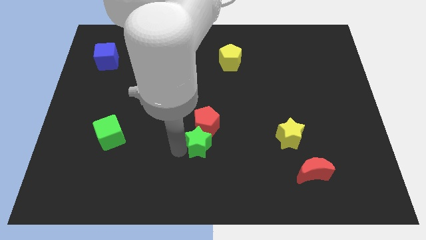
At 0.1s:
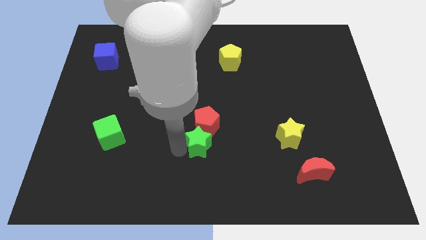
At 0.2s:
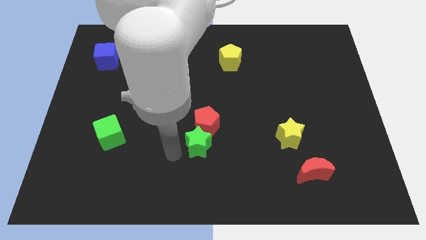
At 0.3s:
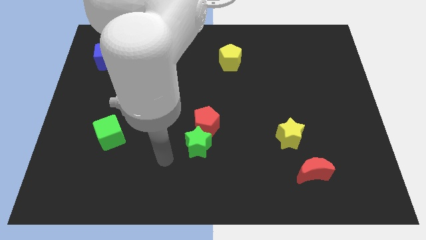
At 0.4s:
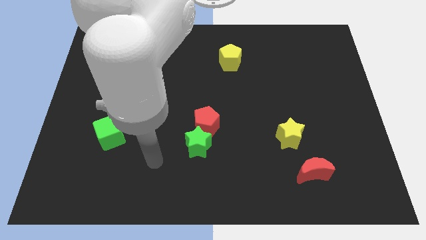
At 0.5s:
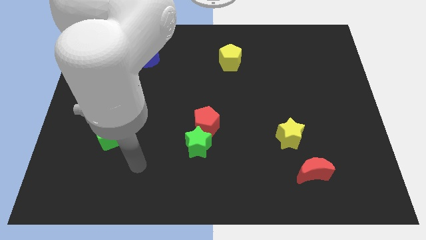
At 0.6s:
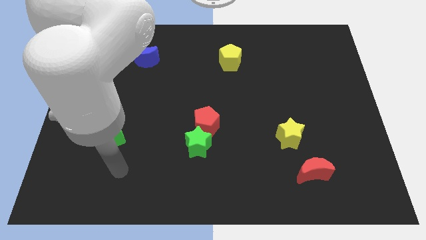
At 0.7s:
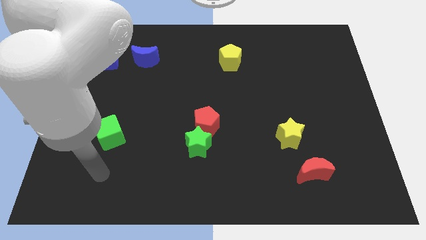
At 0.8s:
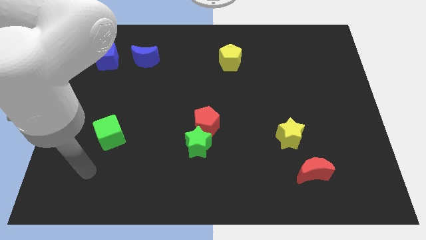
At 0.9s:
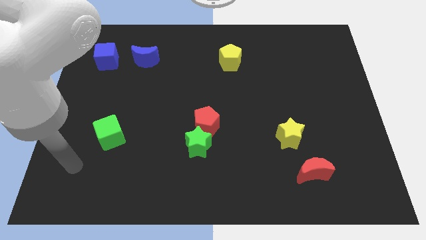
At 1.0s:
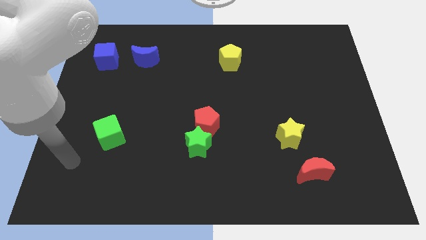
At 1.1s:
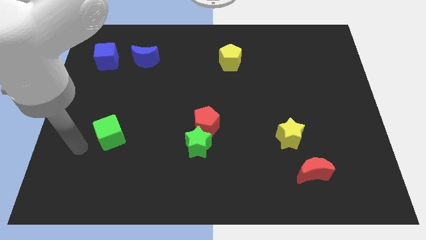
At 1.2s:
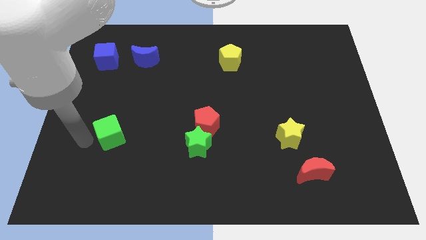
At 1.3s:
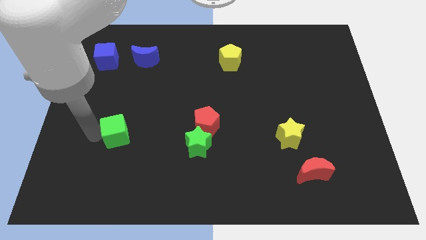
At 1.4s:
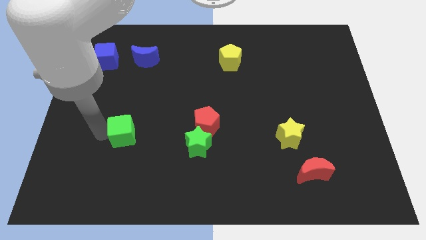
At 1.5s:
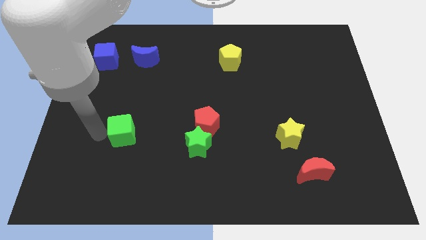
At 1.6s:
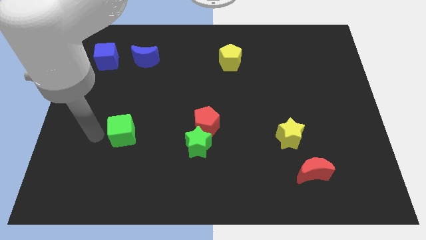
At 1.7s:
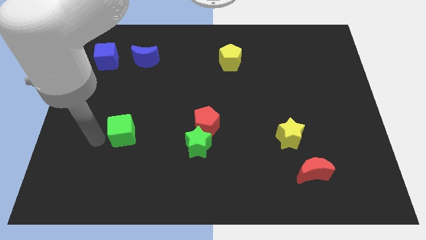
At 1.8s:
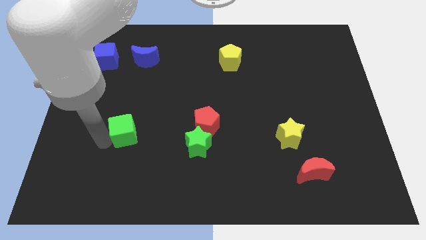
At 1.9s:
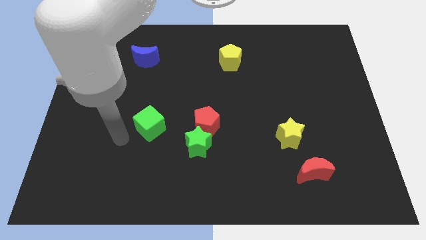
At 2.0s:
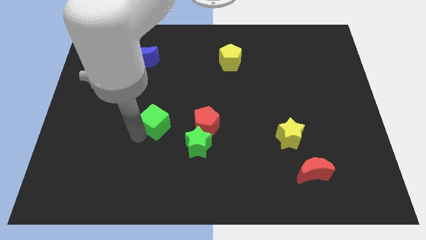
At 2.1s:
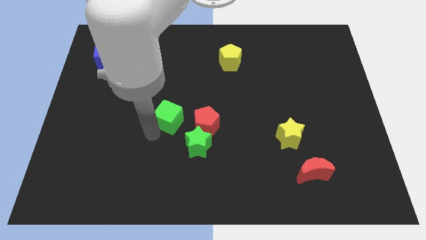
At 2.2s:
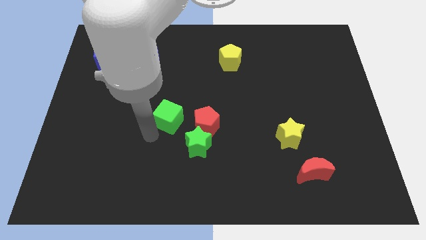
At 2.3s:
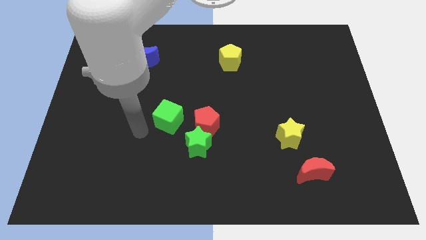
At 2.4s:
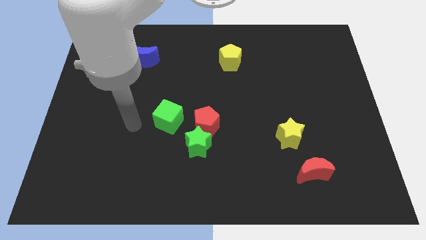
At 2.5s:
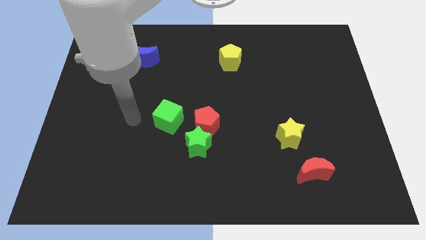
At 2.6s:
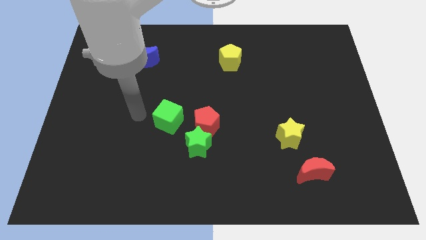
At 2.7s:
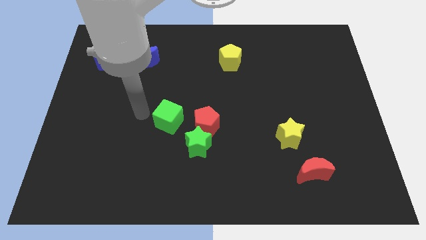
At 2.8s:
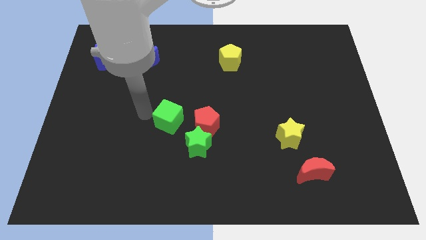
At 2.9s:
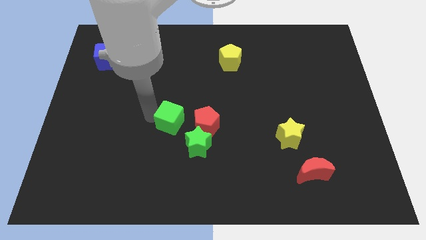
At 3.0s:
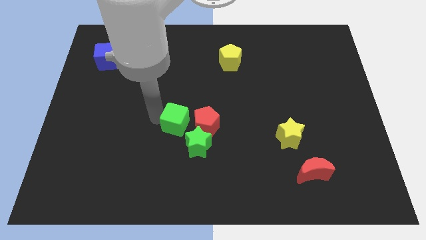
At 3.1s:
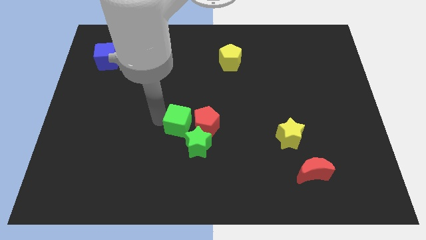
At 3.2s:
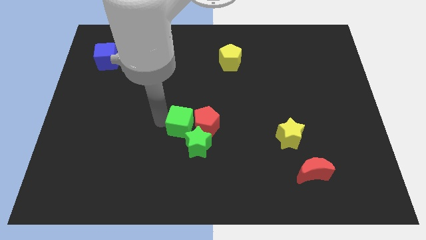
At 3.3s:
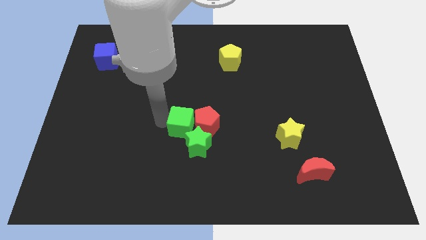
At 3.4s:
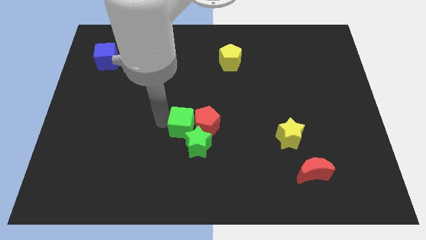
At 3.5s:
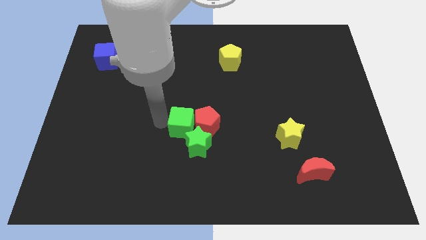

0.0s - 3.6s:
push the green cube close to the left side of the red pentagon

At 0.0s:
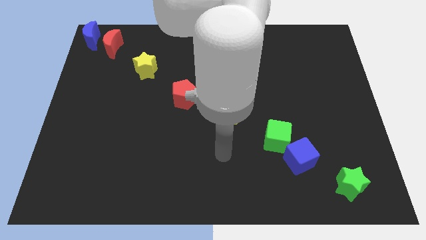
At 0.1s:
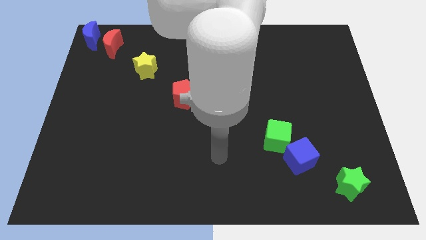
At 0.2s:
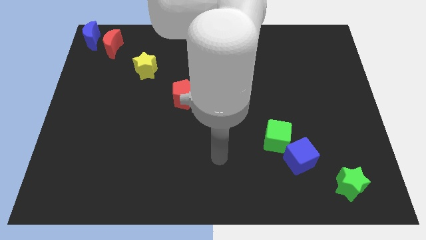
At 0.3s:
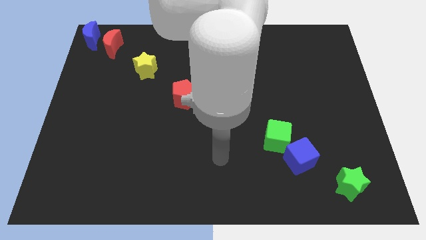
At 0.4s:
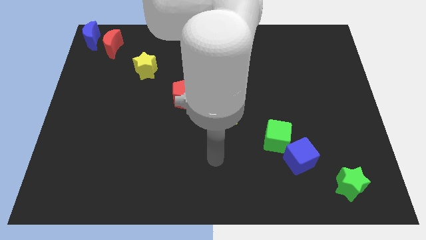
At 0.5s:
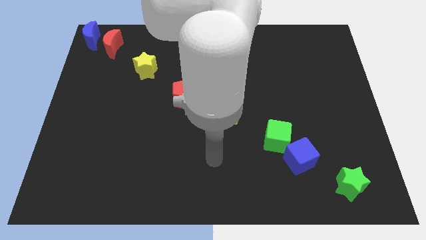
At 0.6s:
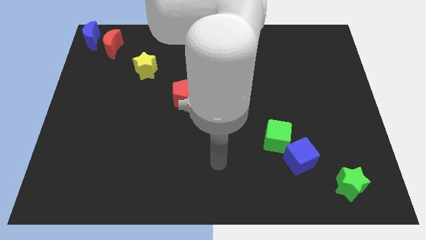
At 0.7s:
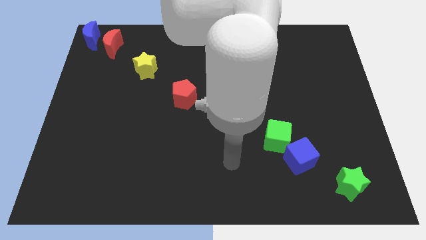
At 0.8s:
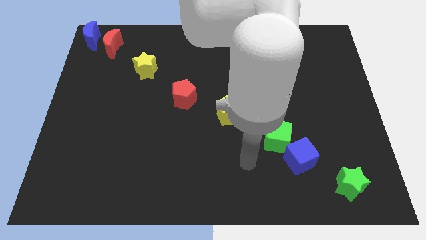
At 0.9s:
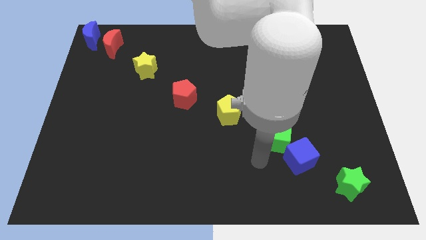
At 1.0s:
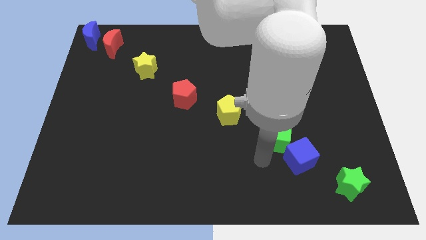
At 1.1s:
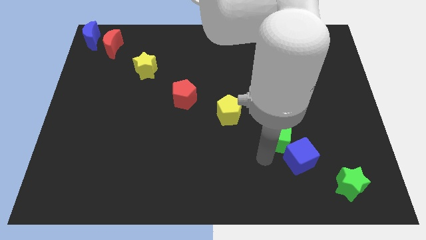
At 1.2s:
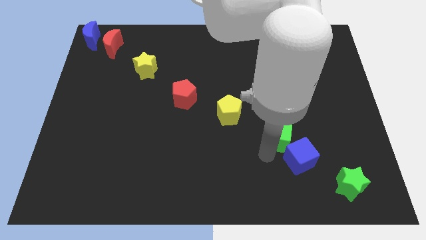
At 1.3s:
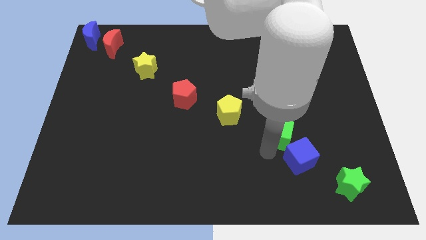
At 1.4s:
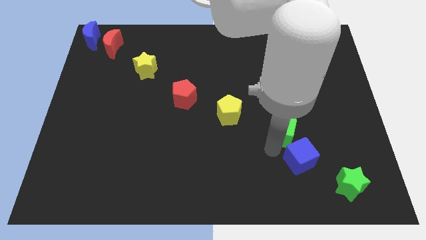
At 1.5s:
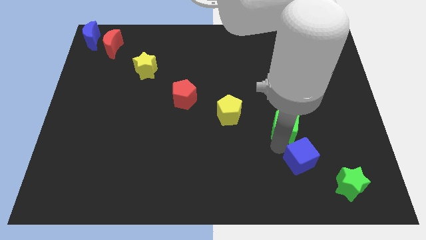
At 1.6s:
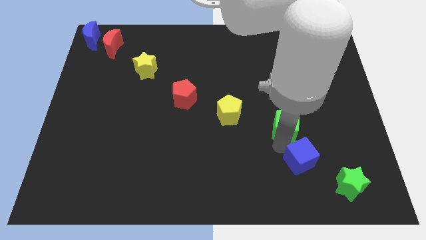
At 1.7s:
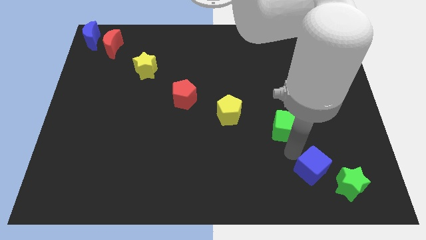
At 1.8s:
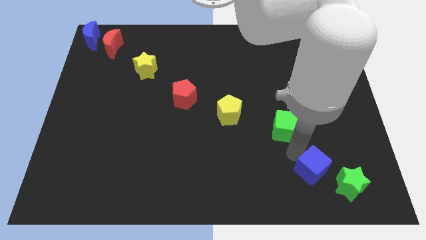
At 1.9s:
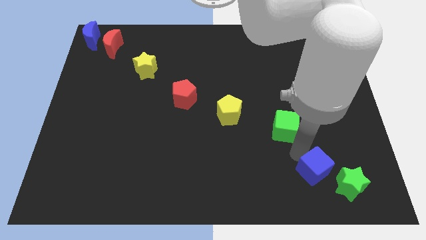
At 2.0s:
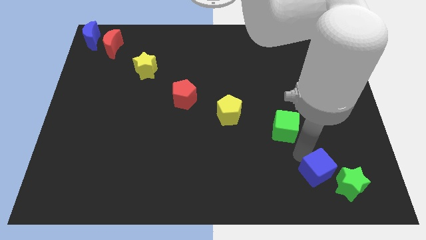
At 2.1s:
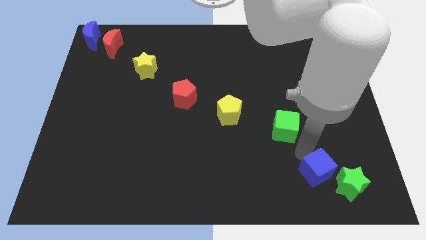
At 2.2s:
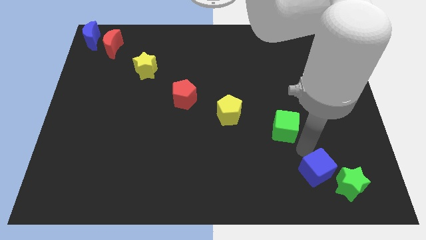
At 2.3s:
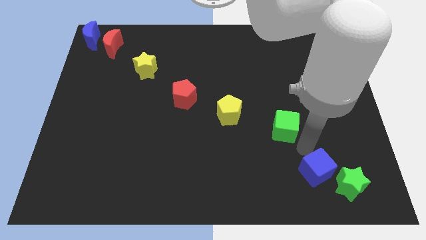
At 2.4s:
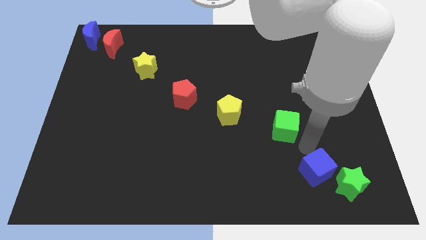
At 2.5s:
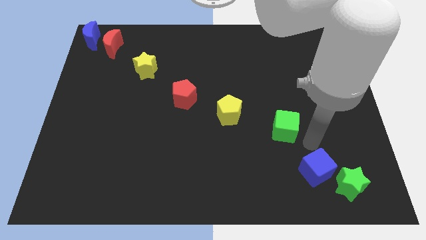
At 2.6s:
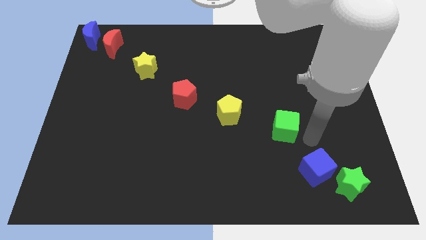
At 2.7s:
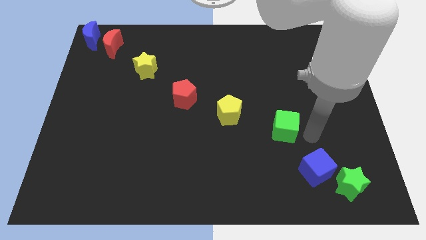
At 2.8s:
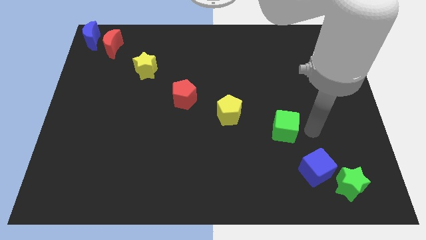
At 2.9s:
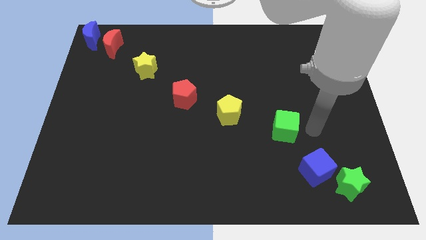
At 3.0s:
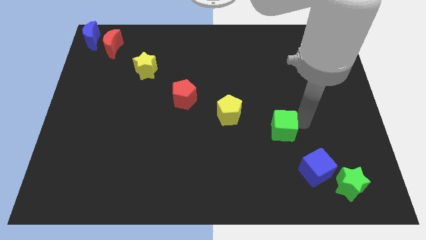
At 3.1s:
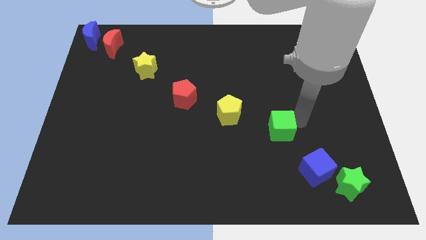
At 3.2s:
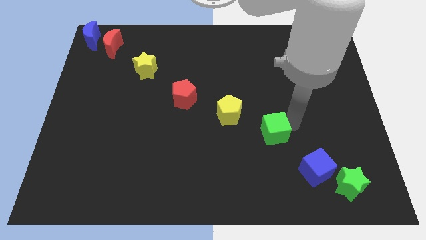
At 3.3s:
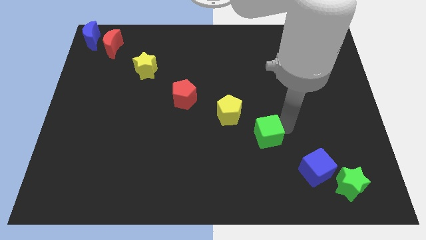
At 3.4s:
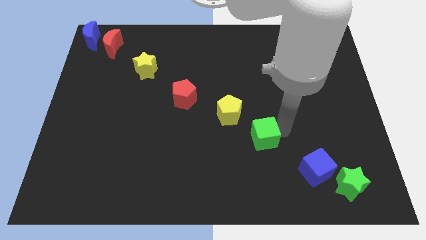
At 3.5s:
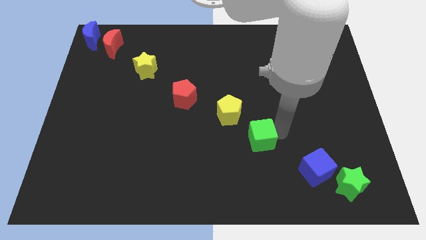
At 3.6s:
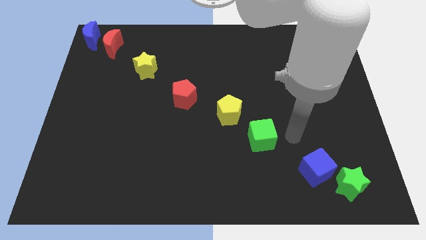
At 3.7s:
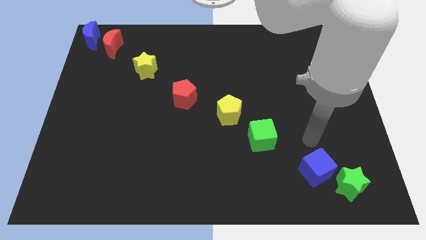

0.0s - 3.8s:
separate green and blue cubes from each other

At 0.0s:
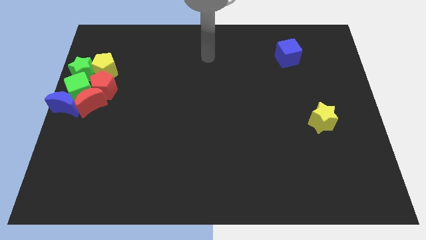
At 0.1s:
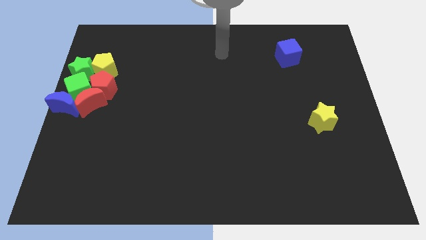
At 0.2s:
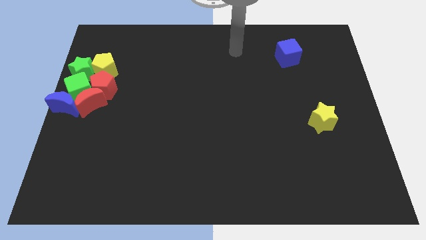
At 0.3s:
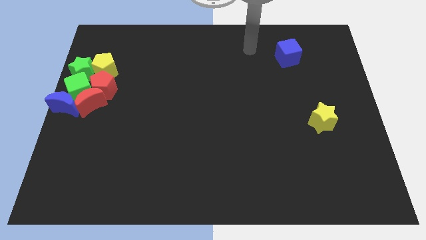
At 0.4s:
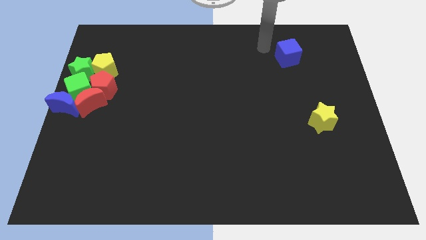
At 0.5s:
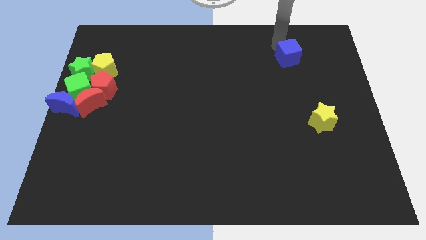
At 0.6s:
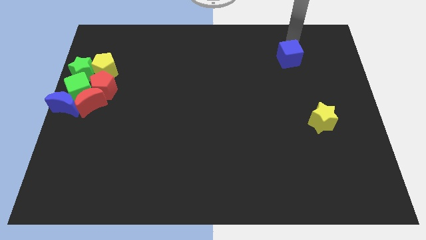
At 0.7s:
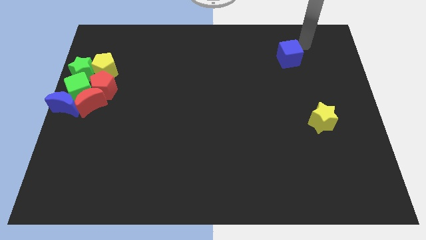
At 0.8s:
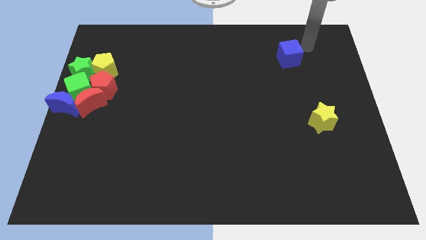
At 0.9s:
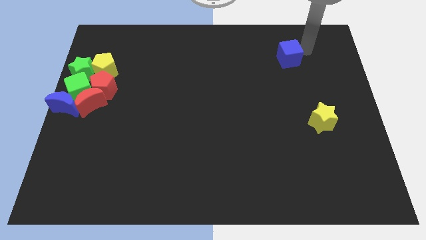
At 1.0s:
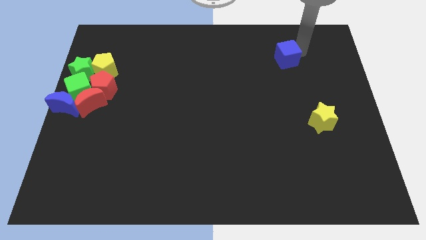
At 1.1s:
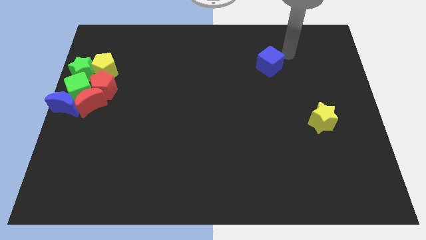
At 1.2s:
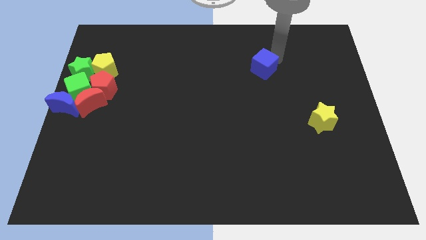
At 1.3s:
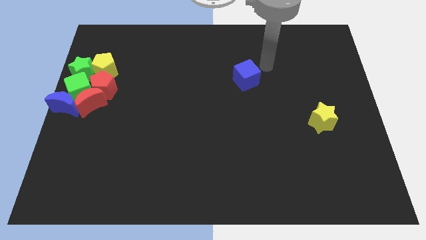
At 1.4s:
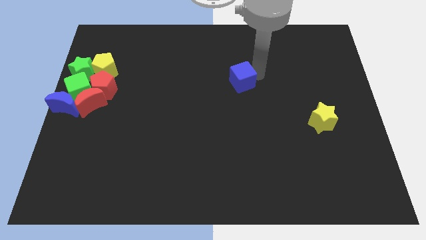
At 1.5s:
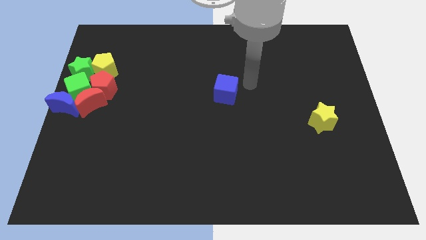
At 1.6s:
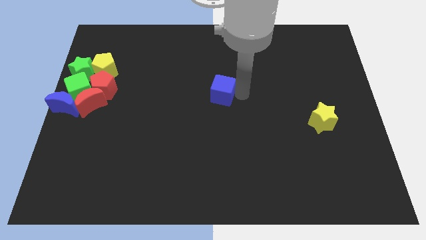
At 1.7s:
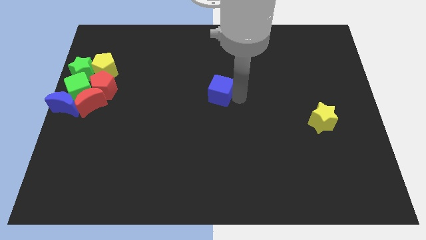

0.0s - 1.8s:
move the blue cube towards center side
